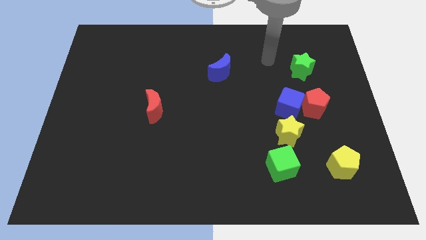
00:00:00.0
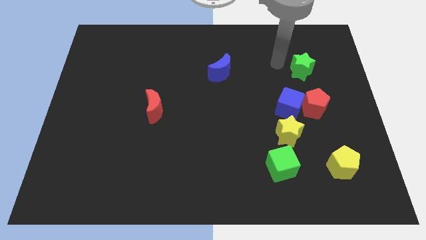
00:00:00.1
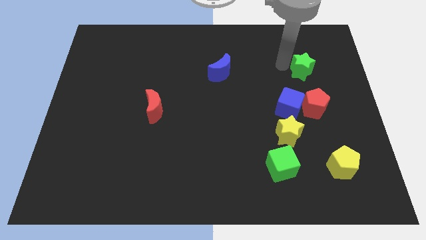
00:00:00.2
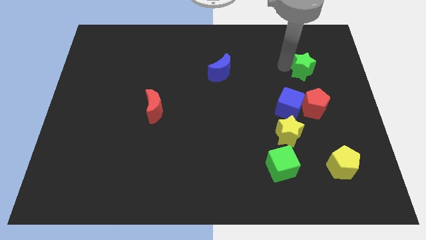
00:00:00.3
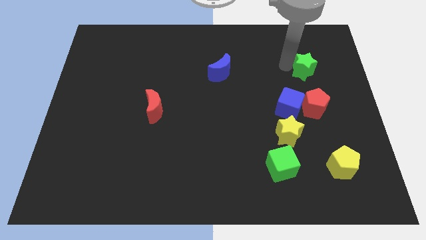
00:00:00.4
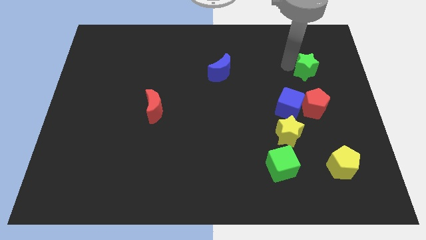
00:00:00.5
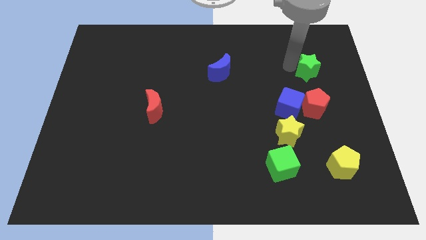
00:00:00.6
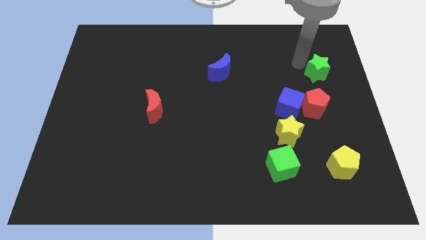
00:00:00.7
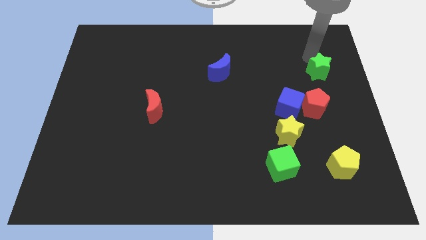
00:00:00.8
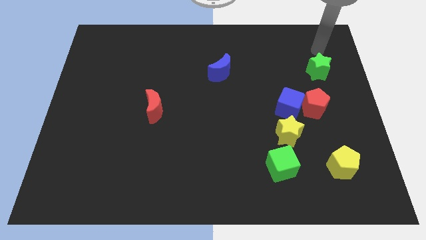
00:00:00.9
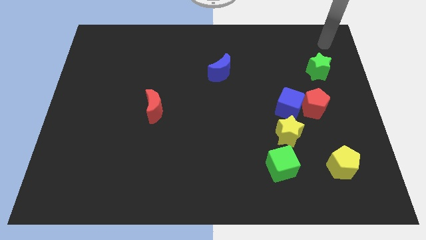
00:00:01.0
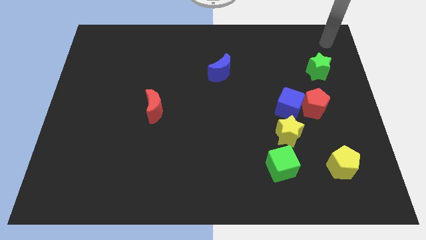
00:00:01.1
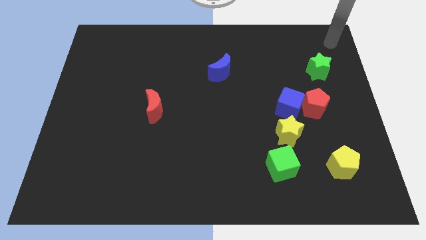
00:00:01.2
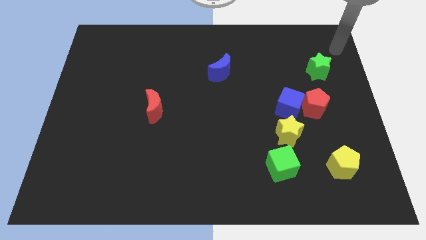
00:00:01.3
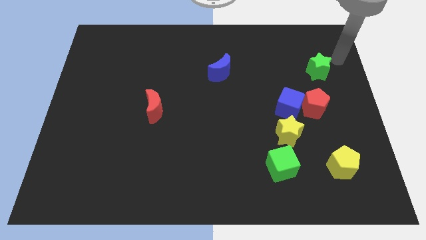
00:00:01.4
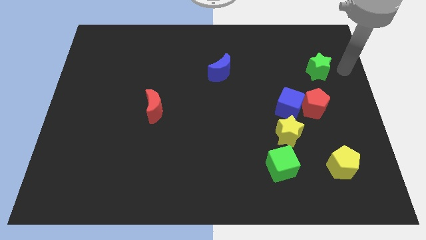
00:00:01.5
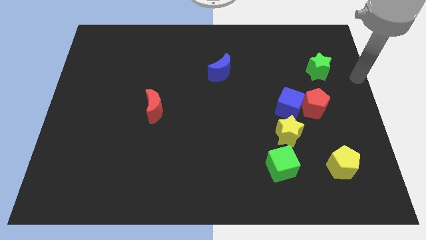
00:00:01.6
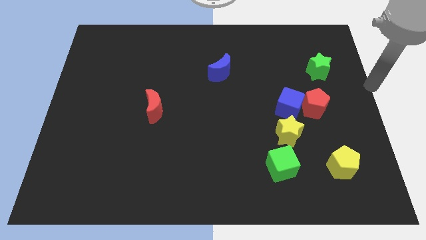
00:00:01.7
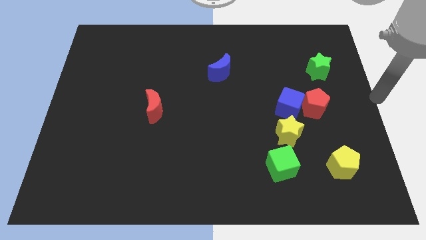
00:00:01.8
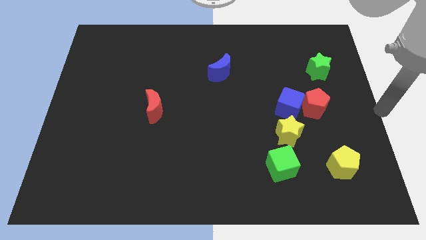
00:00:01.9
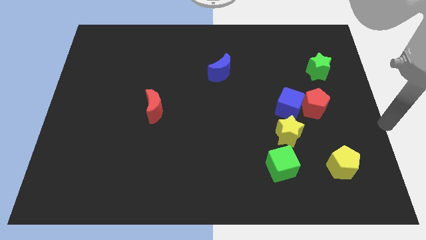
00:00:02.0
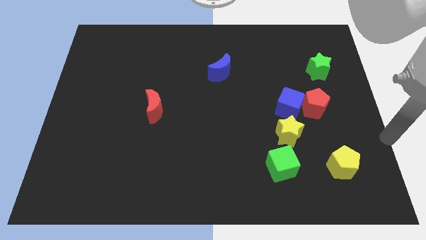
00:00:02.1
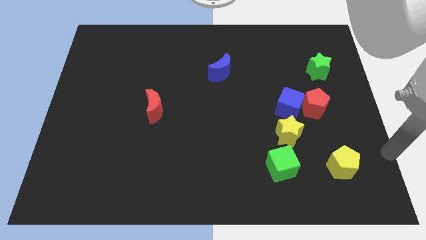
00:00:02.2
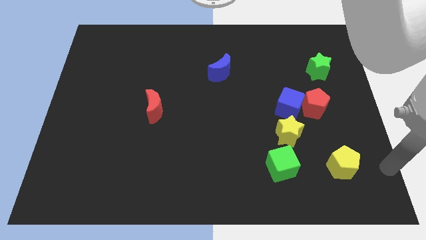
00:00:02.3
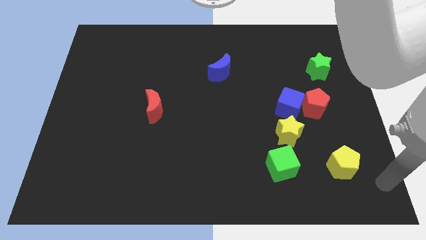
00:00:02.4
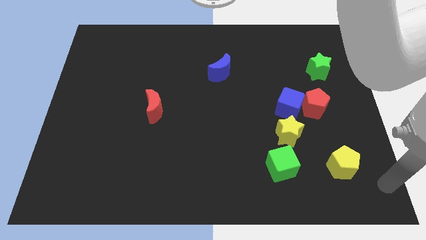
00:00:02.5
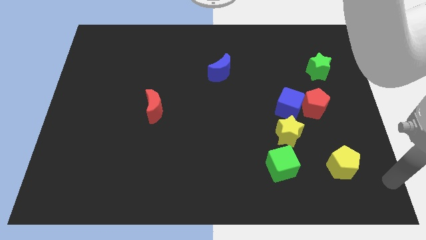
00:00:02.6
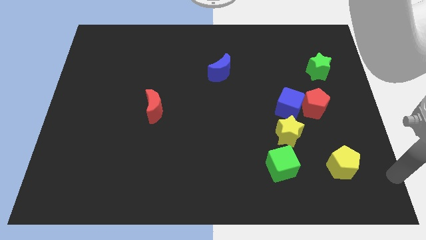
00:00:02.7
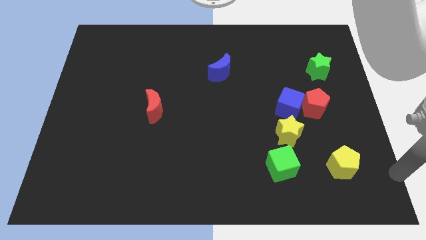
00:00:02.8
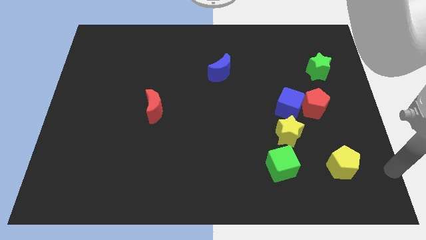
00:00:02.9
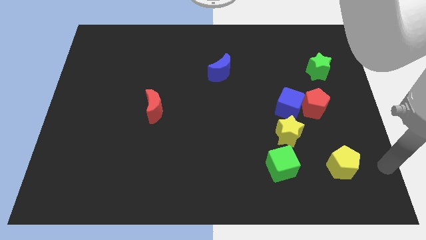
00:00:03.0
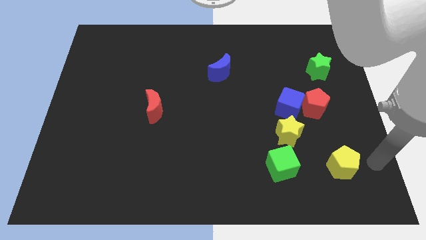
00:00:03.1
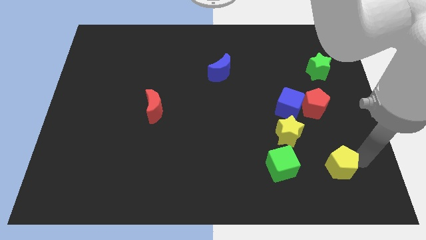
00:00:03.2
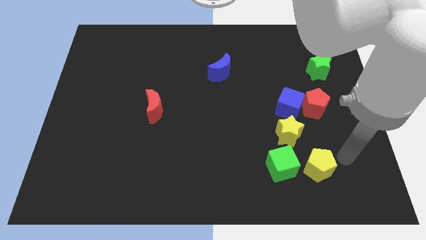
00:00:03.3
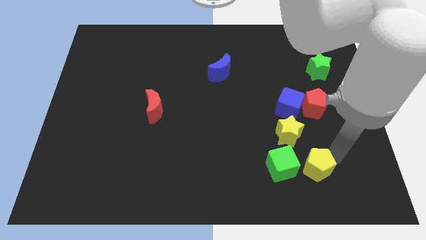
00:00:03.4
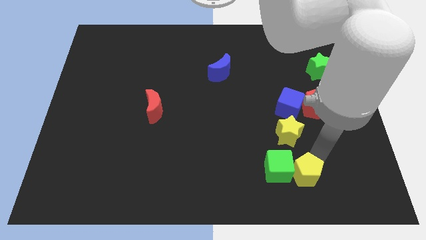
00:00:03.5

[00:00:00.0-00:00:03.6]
push the yellow pentagon into green cube

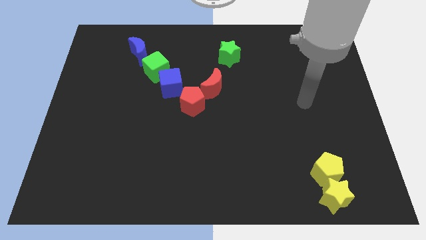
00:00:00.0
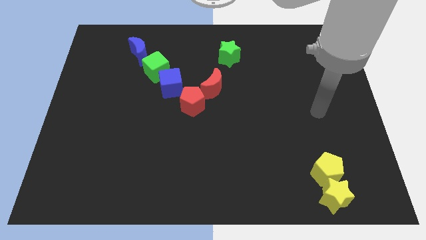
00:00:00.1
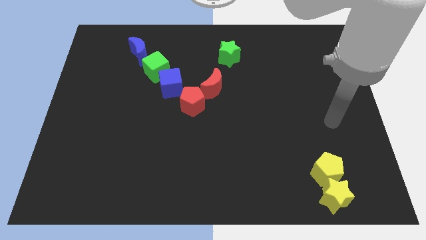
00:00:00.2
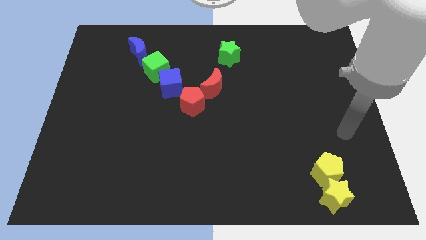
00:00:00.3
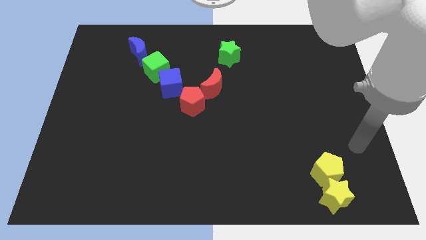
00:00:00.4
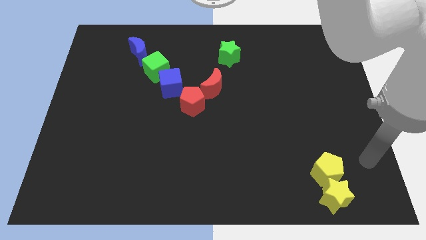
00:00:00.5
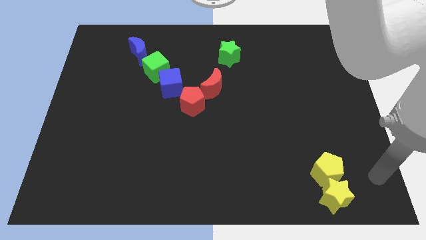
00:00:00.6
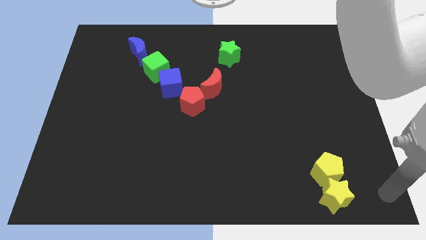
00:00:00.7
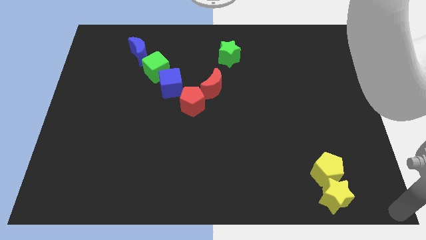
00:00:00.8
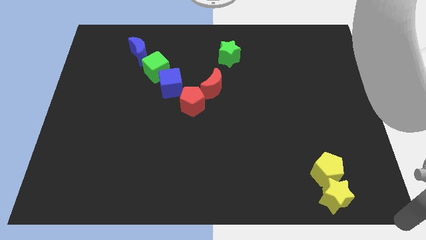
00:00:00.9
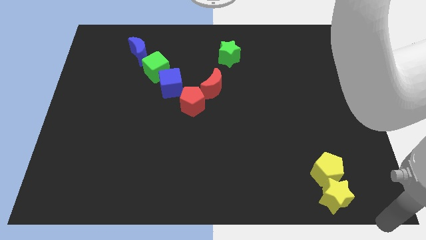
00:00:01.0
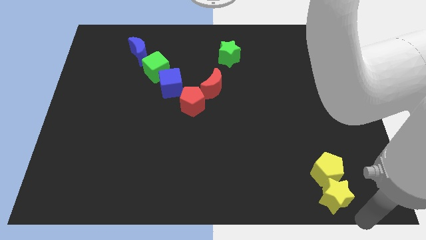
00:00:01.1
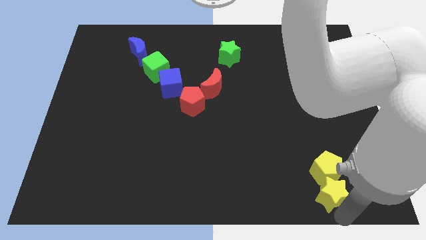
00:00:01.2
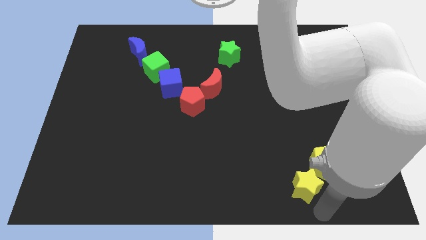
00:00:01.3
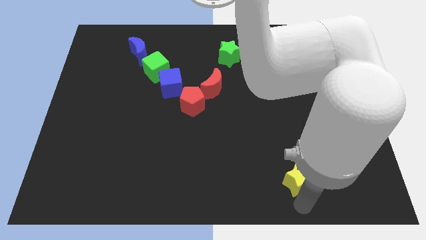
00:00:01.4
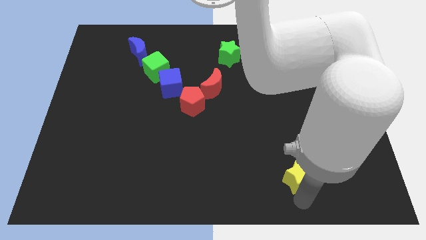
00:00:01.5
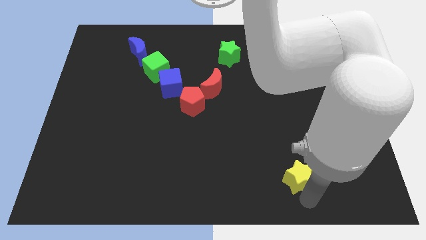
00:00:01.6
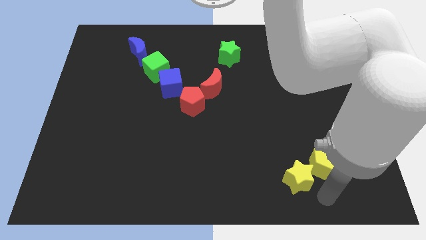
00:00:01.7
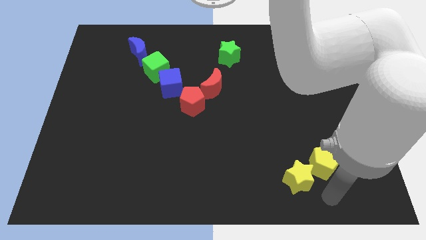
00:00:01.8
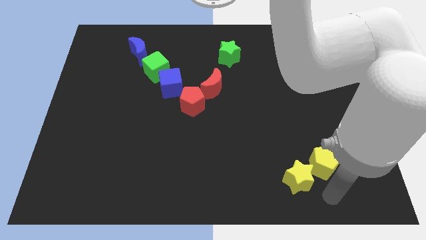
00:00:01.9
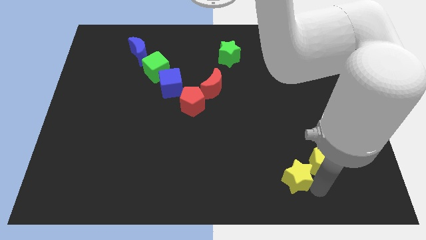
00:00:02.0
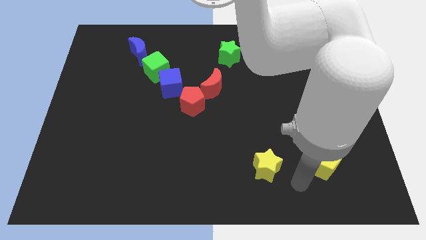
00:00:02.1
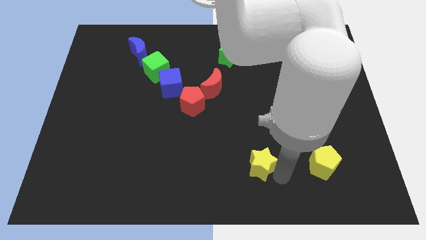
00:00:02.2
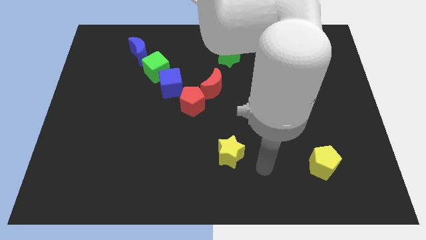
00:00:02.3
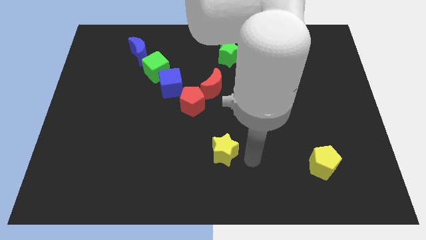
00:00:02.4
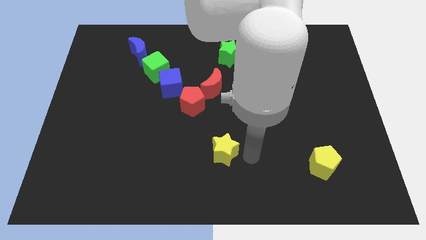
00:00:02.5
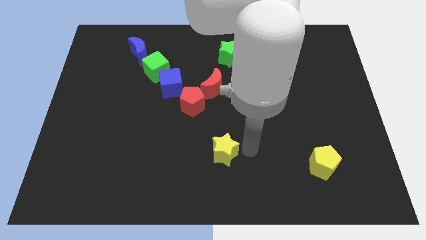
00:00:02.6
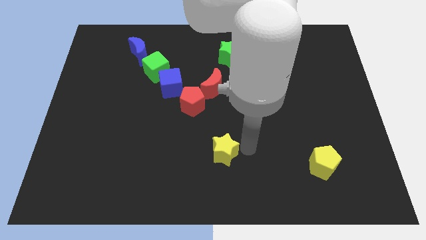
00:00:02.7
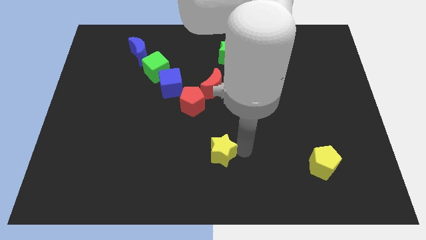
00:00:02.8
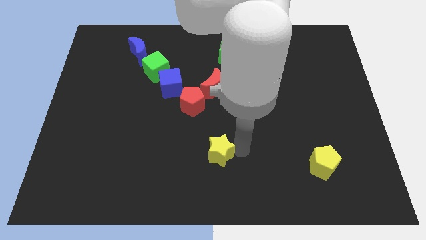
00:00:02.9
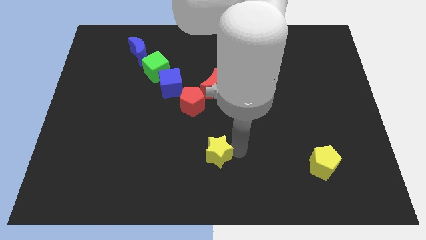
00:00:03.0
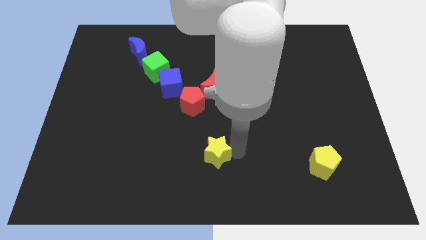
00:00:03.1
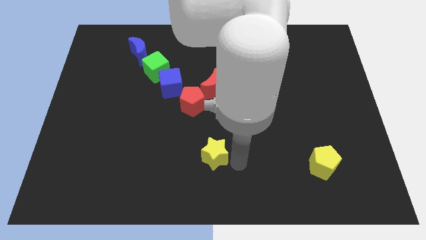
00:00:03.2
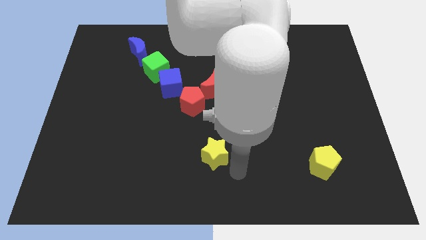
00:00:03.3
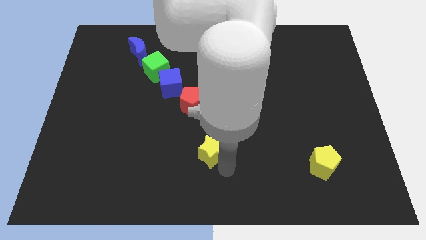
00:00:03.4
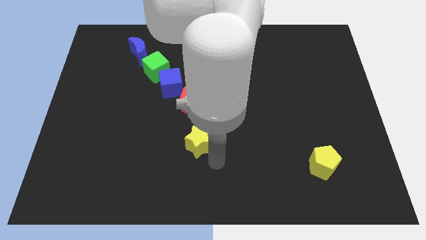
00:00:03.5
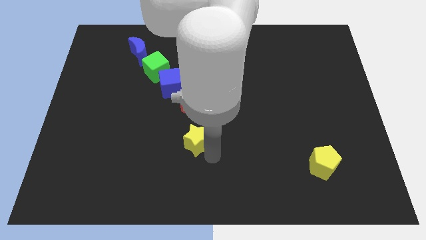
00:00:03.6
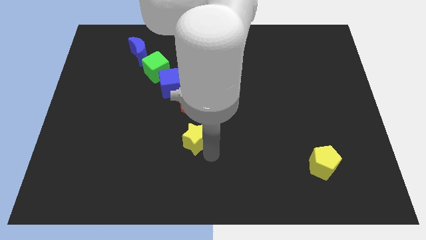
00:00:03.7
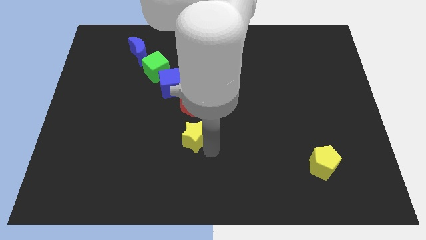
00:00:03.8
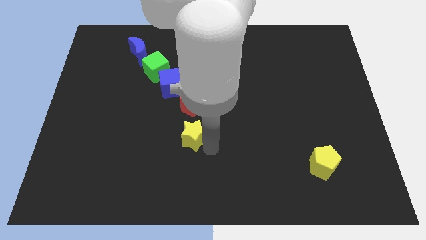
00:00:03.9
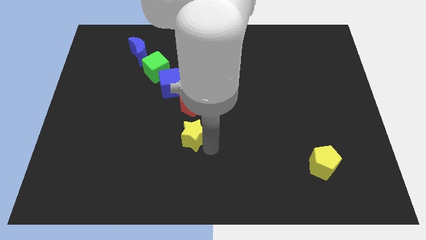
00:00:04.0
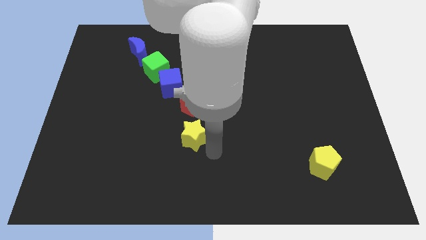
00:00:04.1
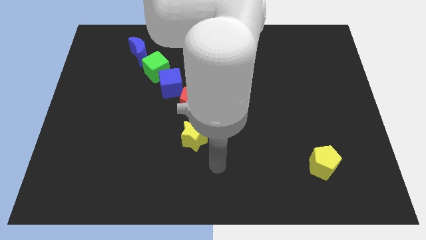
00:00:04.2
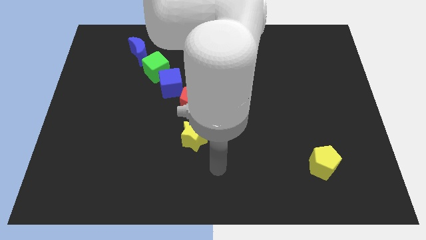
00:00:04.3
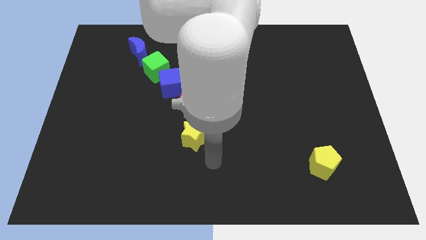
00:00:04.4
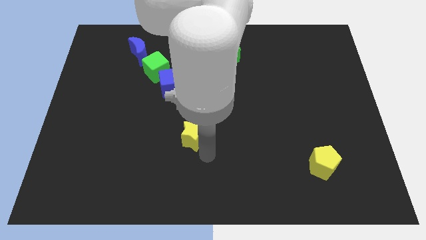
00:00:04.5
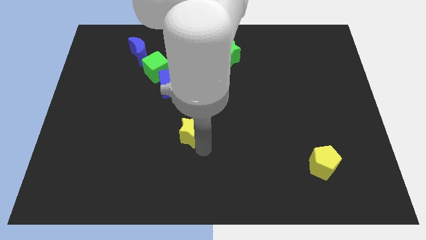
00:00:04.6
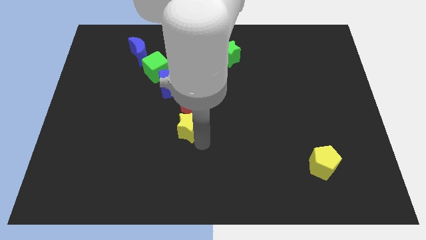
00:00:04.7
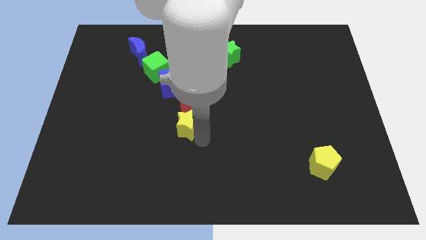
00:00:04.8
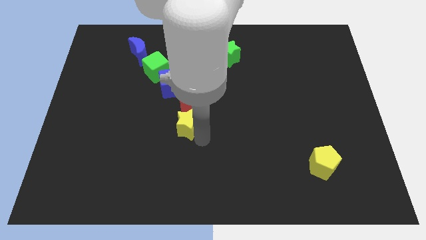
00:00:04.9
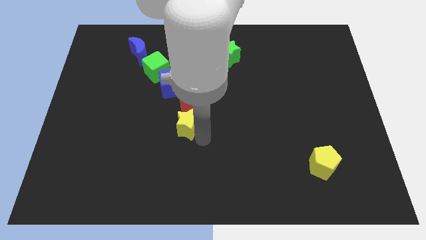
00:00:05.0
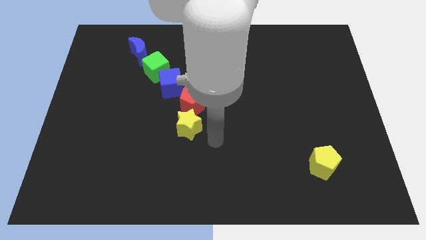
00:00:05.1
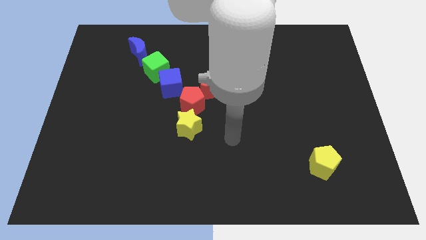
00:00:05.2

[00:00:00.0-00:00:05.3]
move the yellow star close to the red pentagon

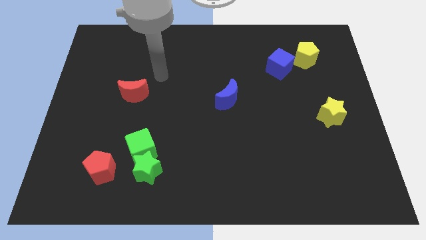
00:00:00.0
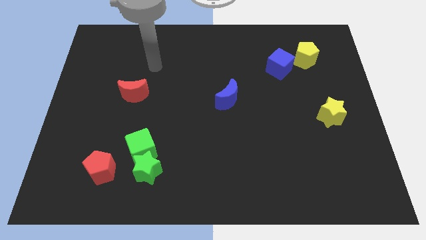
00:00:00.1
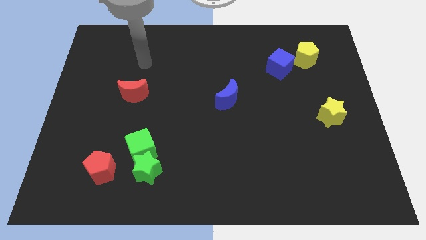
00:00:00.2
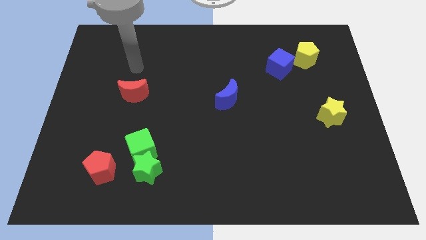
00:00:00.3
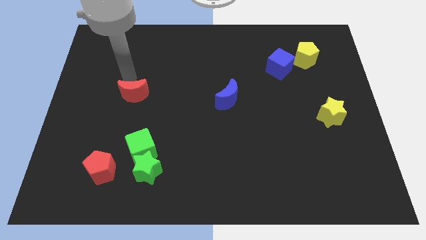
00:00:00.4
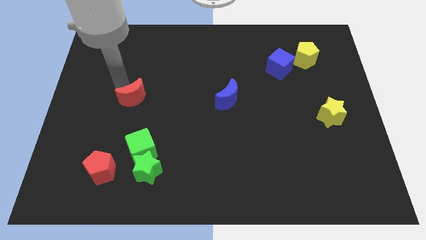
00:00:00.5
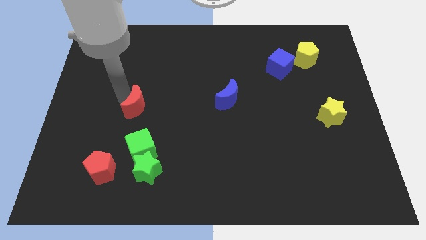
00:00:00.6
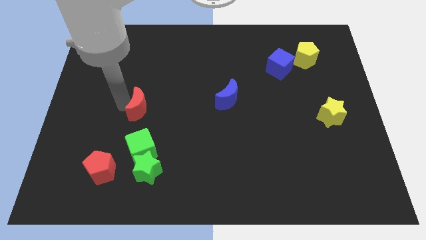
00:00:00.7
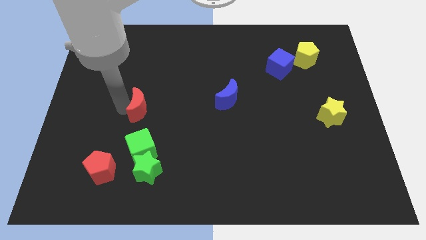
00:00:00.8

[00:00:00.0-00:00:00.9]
push the red crescent towards green cube
